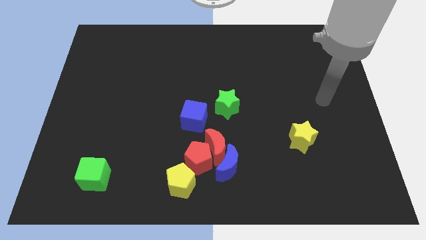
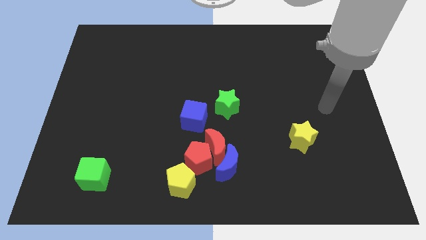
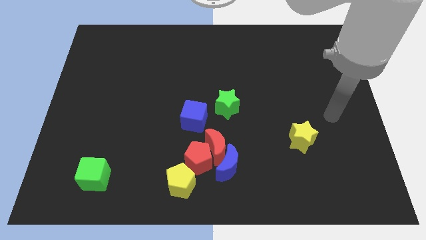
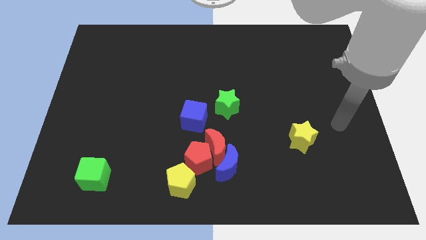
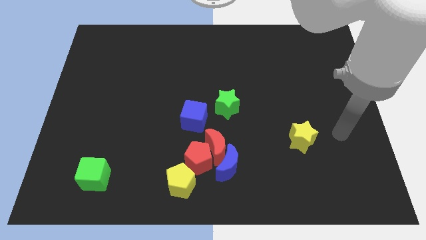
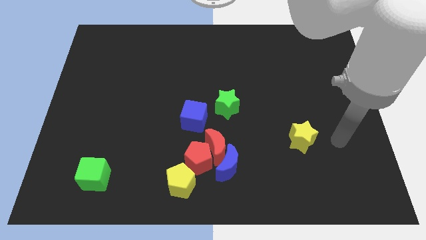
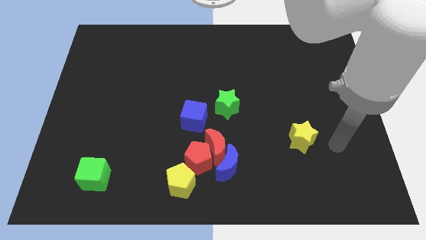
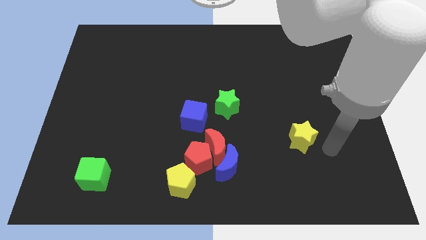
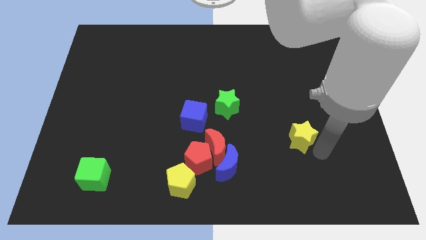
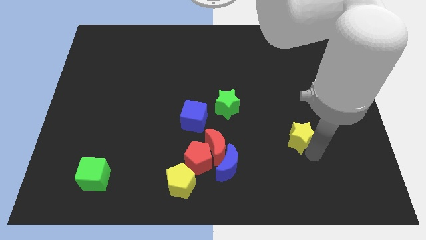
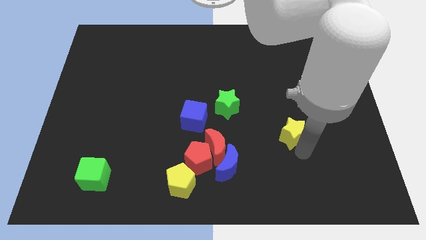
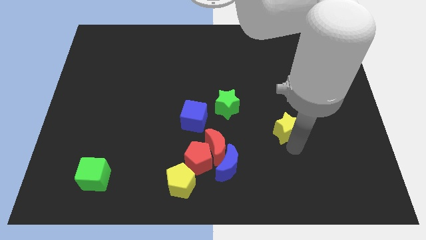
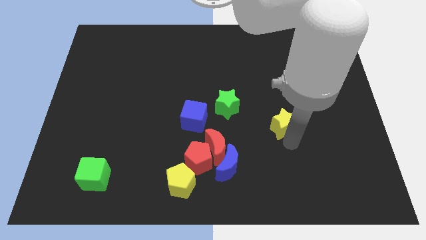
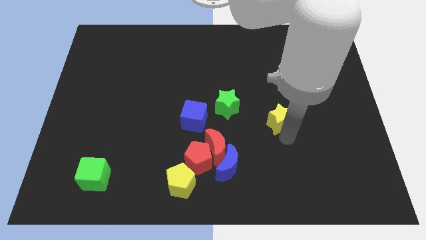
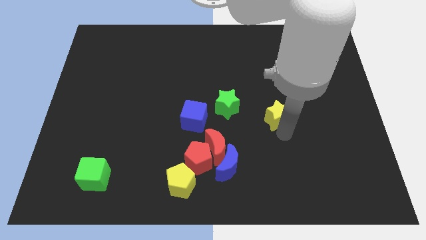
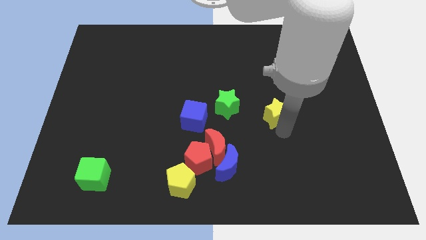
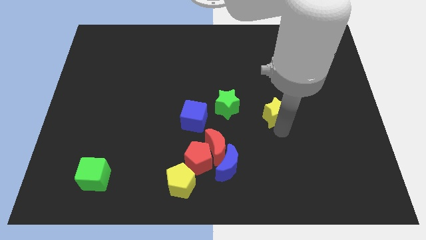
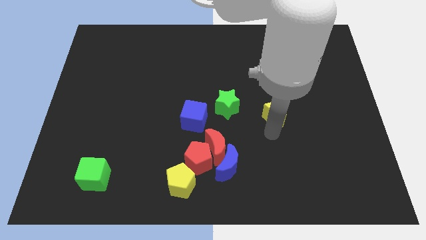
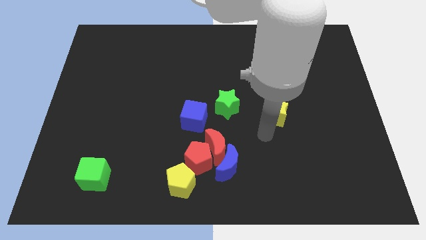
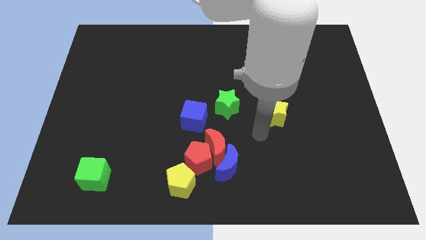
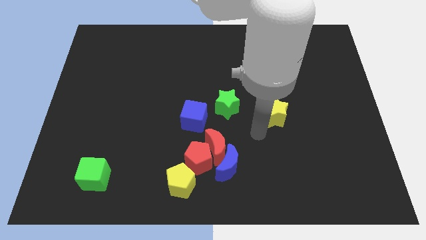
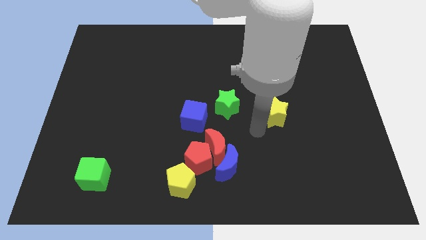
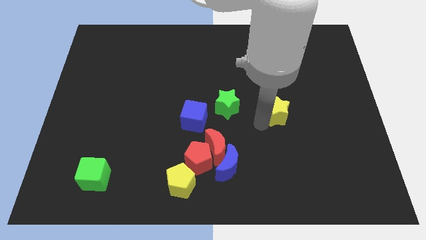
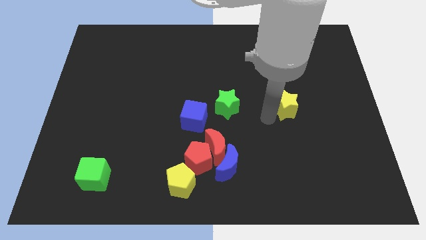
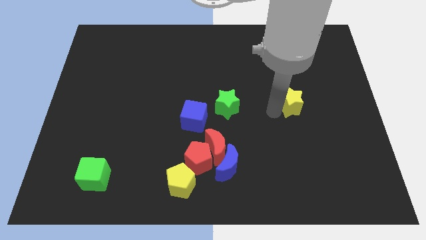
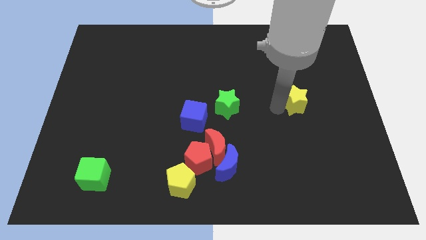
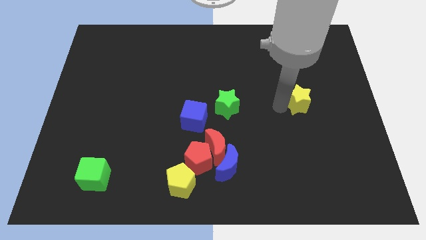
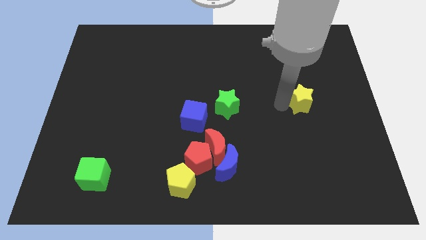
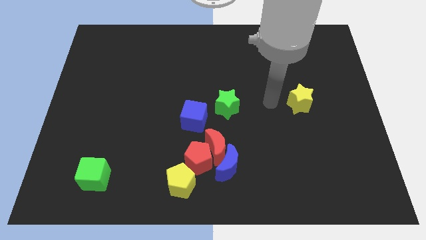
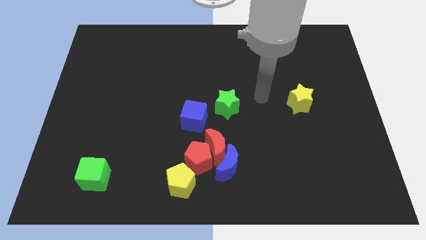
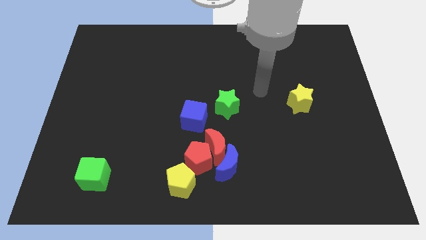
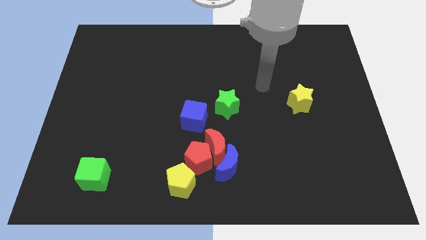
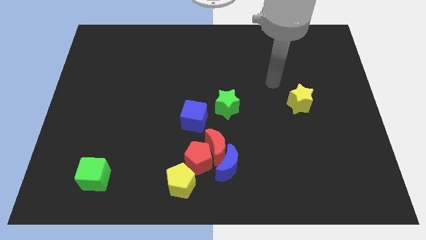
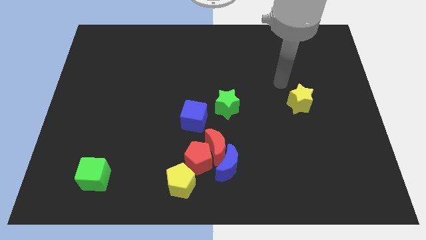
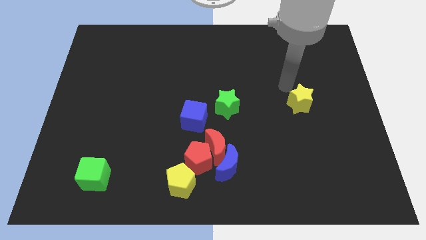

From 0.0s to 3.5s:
place the yellow star to the right of the green star

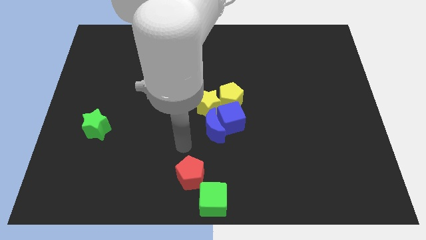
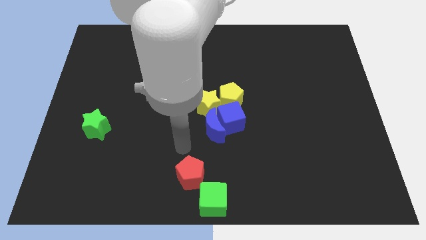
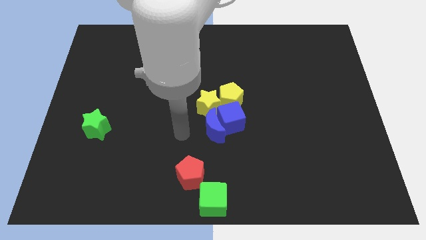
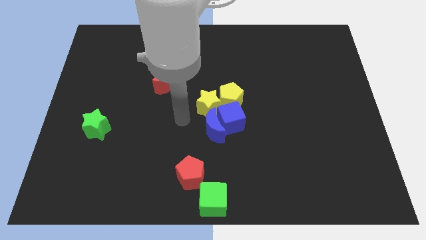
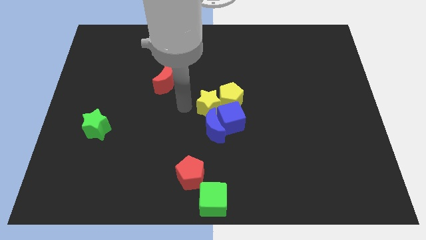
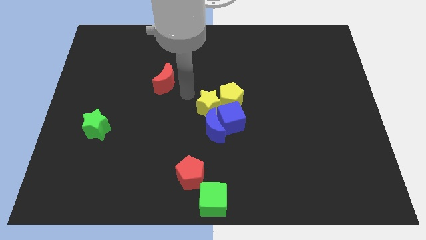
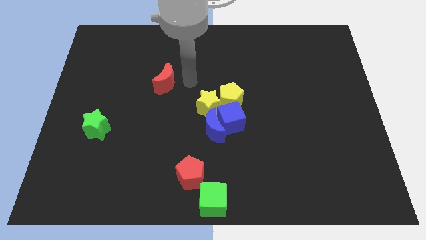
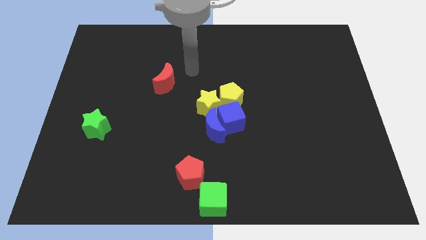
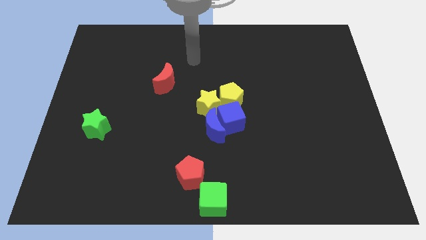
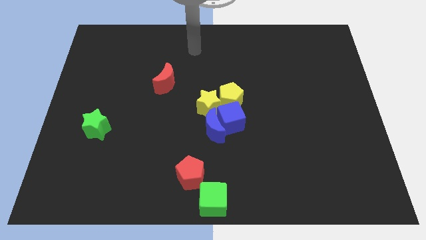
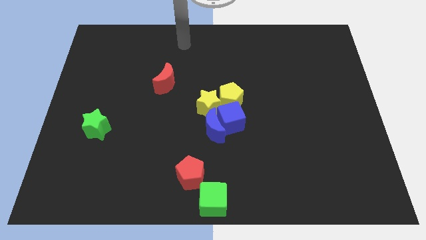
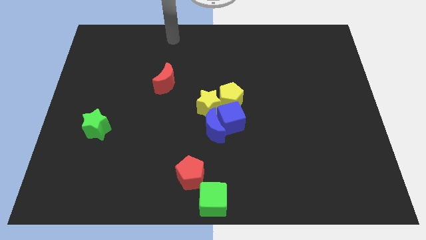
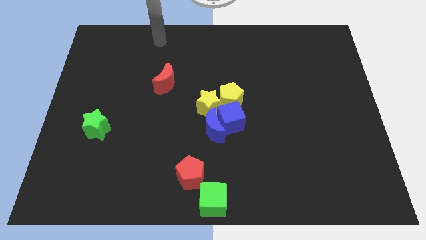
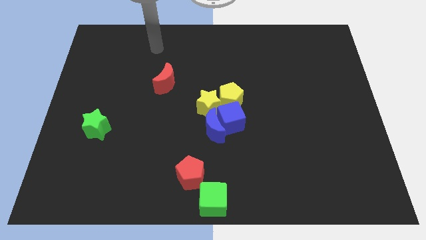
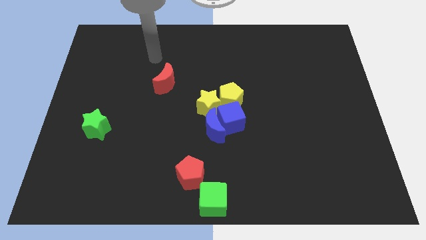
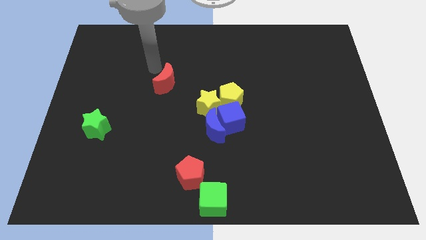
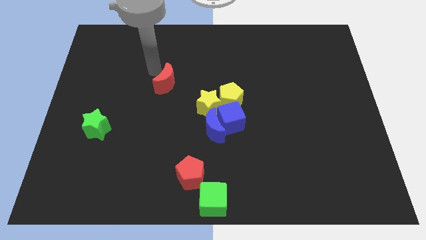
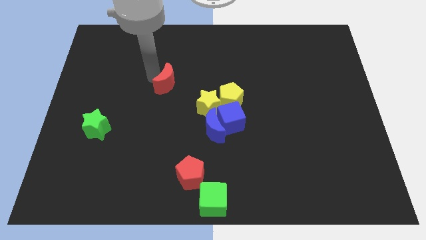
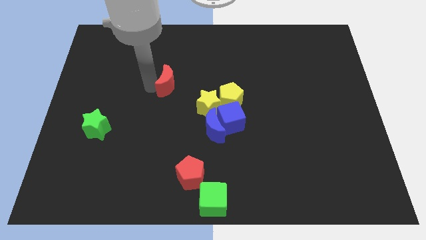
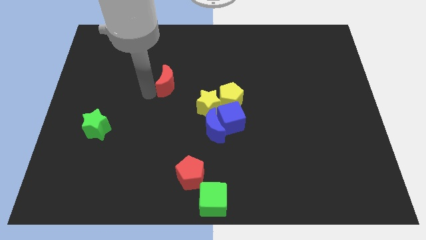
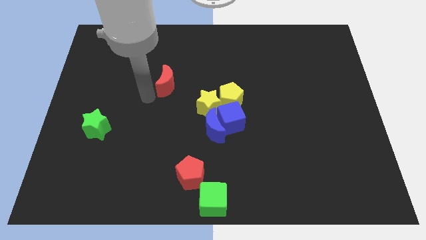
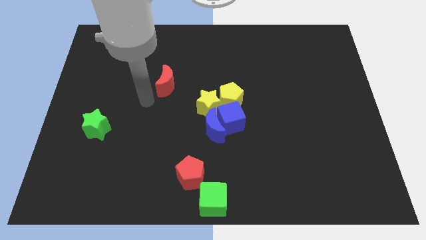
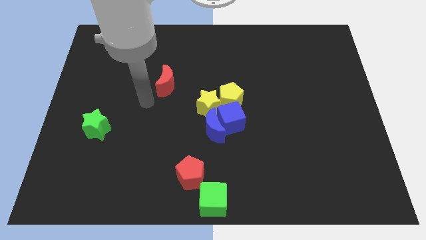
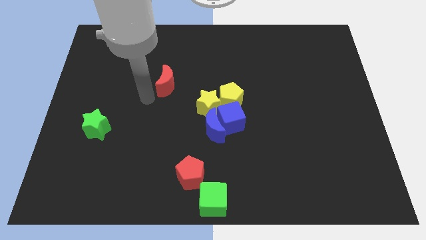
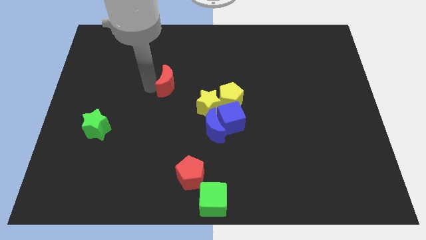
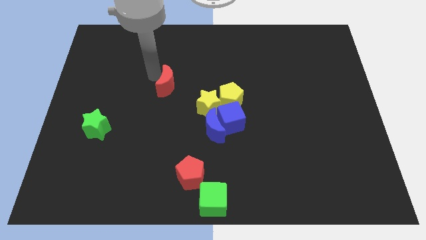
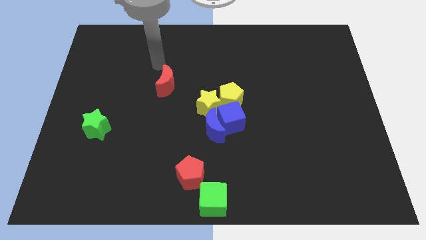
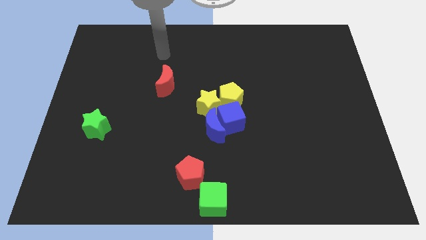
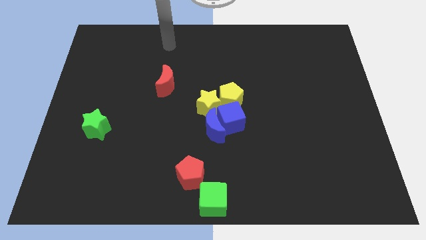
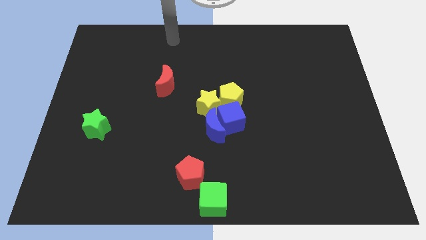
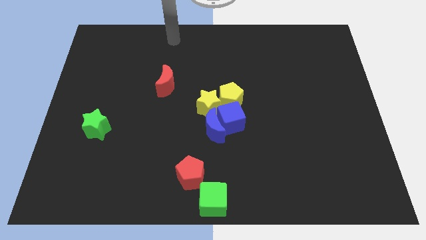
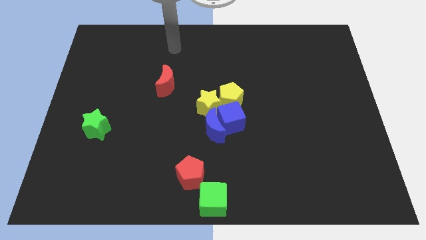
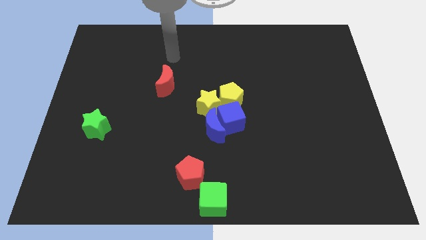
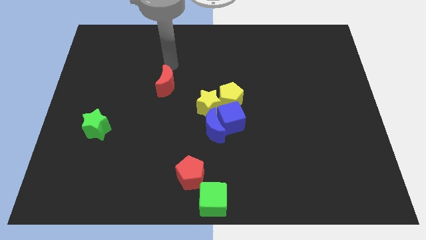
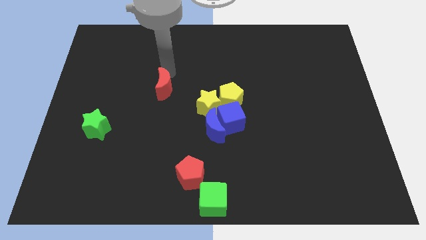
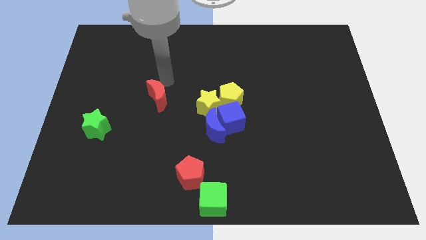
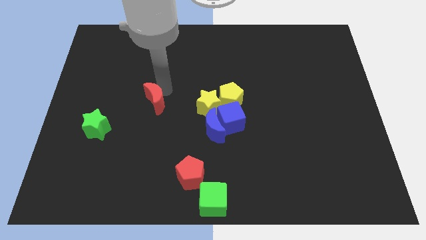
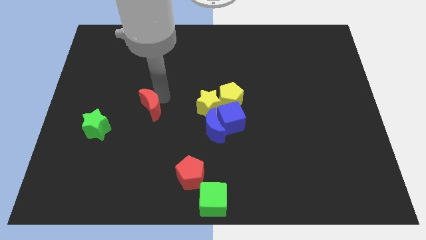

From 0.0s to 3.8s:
push the red crescent slightly downwards

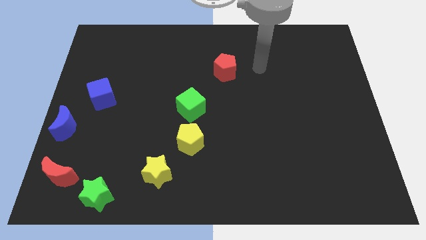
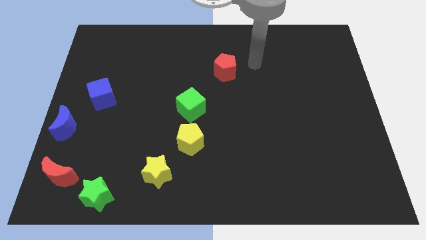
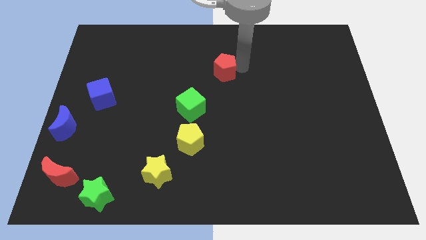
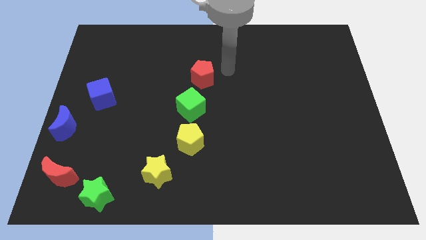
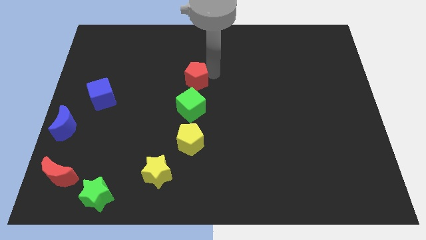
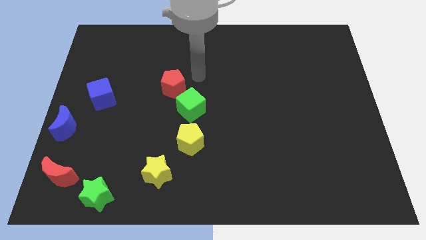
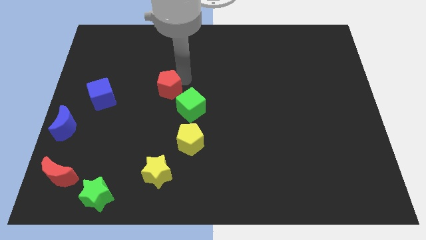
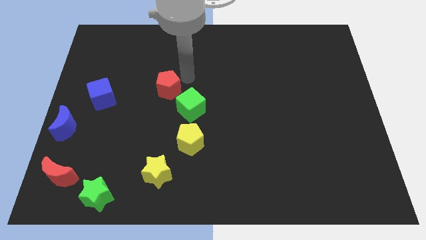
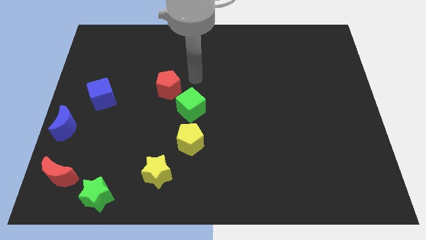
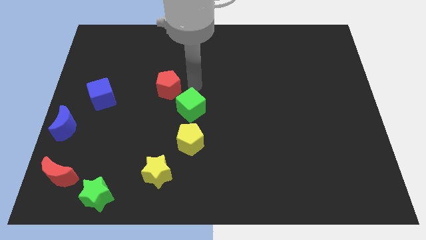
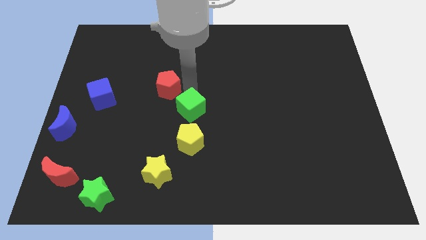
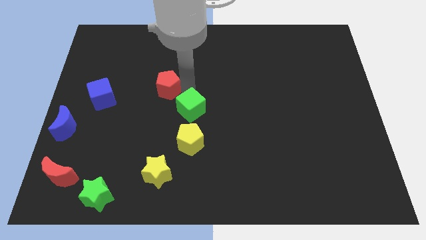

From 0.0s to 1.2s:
move the red pentagon diagonal to the green cube

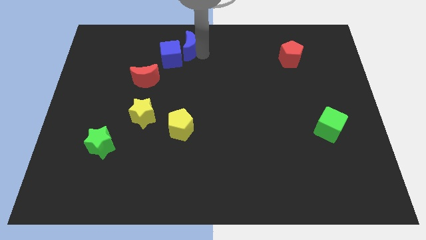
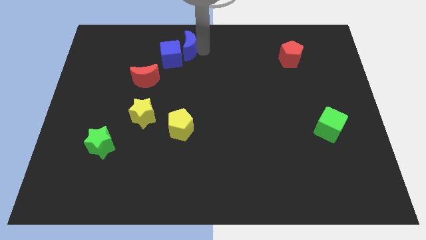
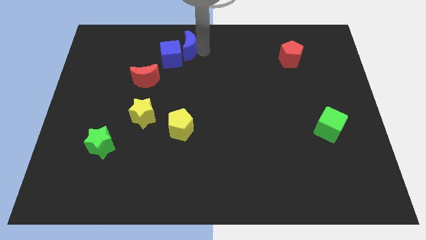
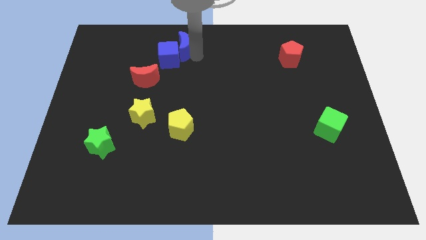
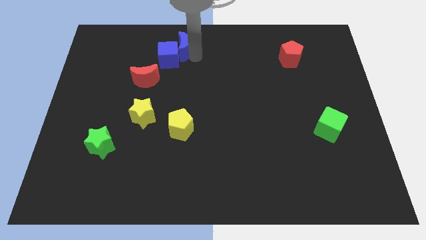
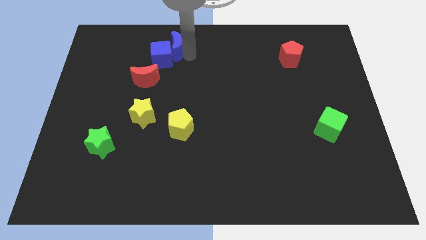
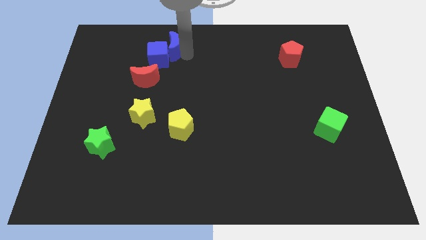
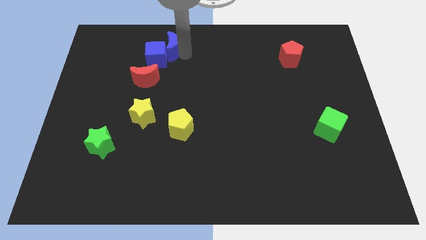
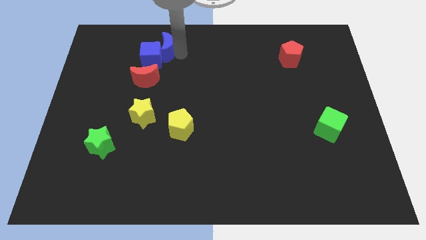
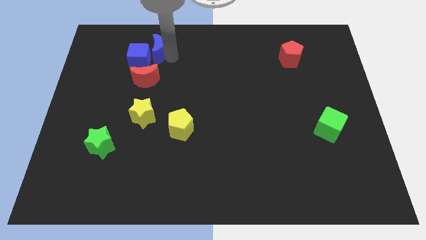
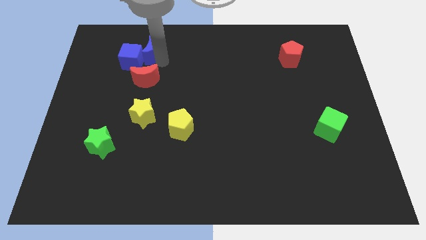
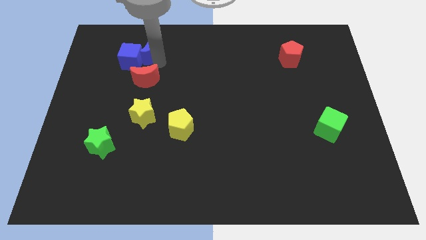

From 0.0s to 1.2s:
place blue moon to the top of red moon
